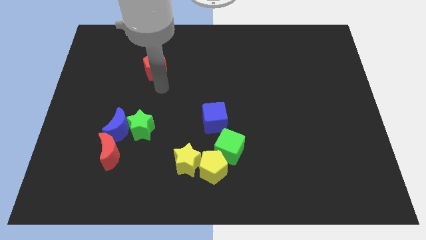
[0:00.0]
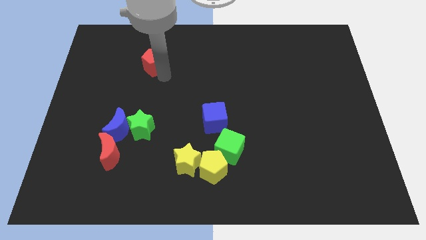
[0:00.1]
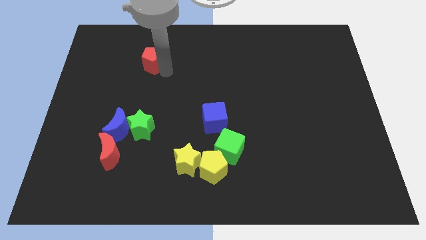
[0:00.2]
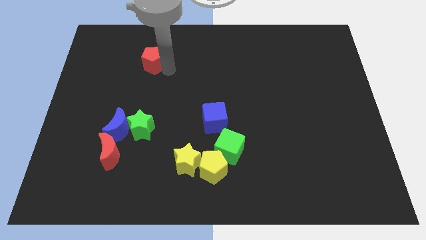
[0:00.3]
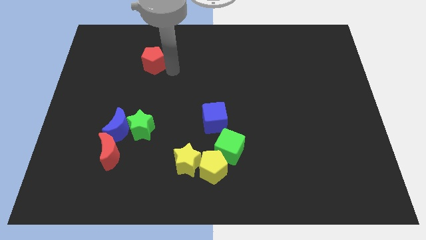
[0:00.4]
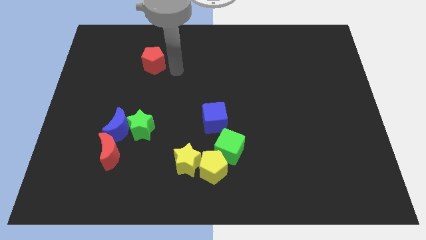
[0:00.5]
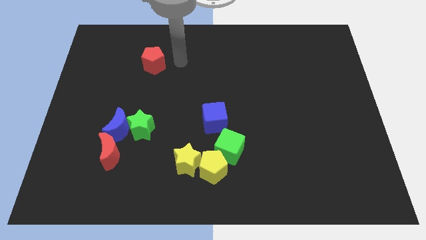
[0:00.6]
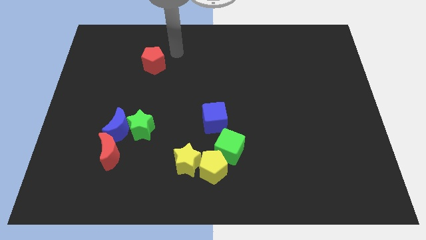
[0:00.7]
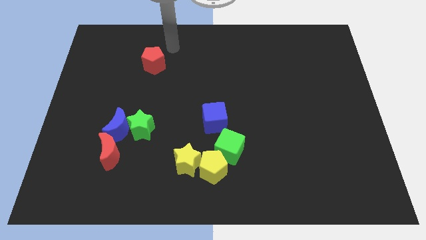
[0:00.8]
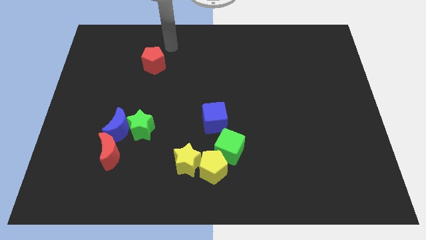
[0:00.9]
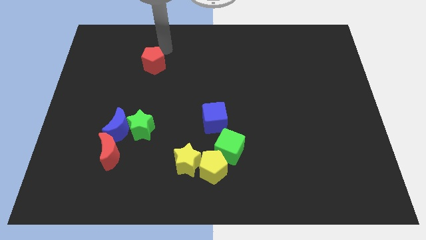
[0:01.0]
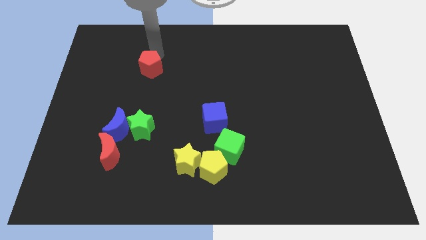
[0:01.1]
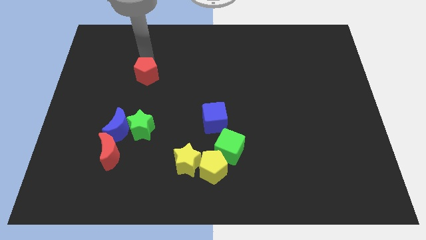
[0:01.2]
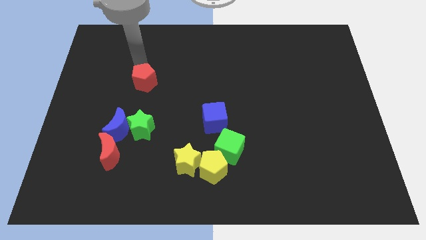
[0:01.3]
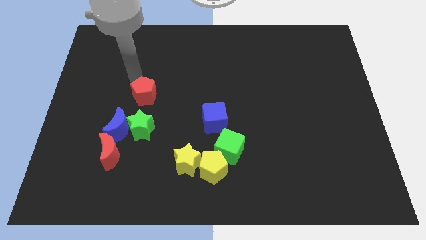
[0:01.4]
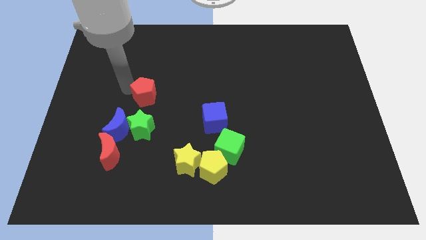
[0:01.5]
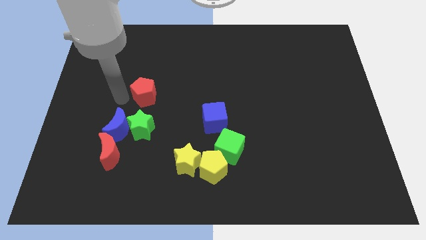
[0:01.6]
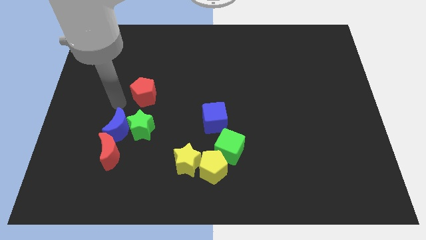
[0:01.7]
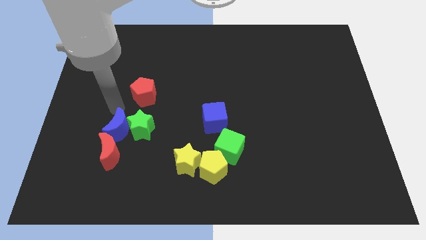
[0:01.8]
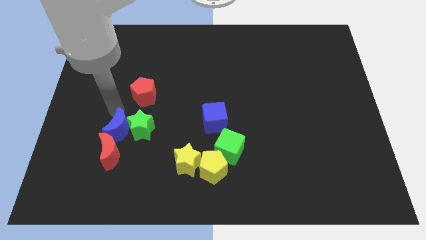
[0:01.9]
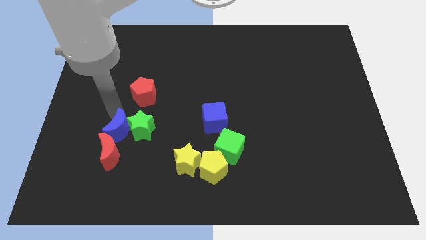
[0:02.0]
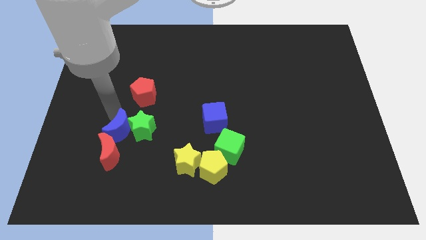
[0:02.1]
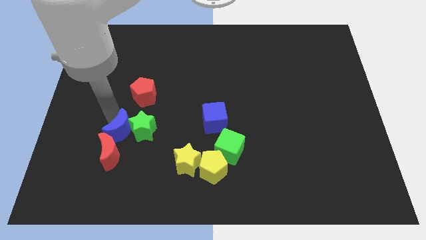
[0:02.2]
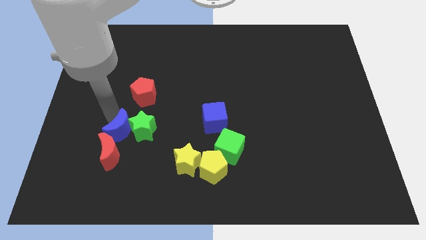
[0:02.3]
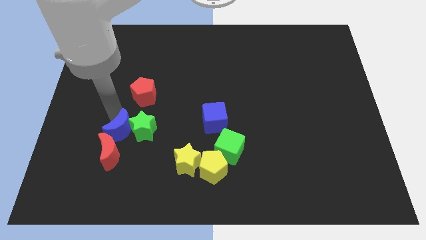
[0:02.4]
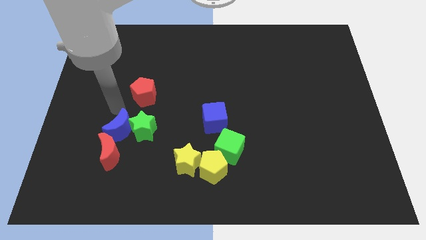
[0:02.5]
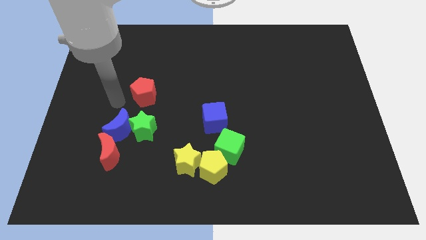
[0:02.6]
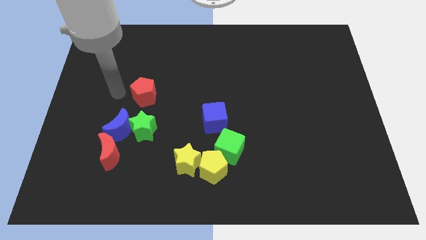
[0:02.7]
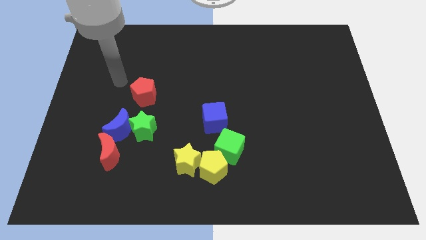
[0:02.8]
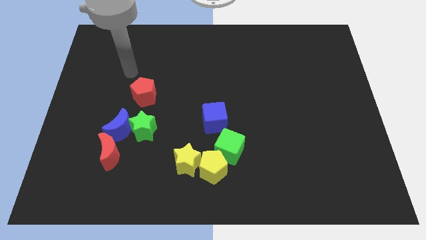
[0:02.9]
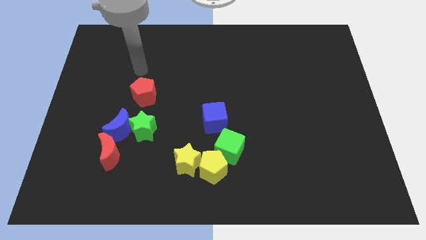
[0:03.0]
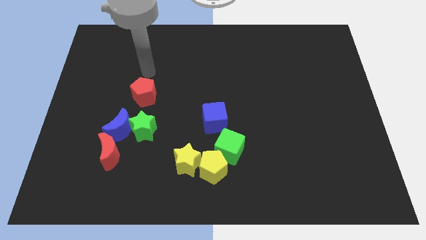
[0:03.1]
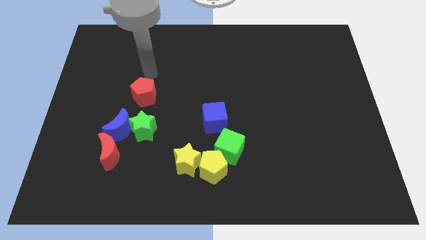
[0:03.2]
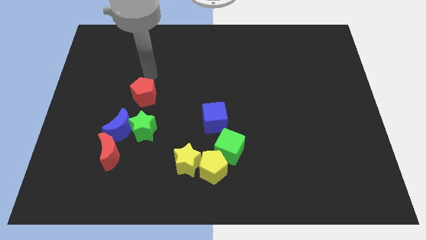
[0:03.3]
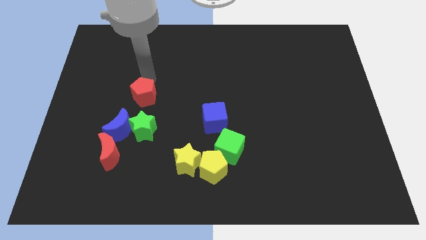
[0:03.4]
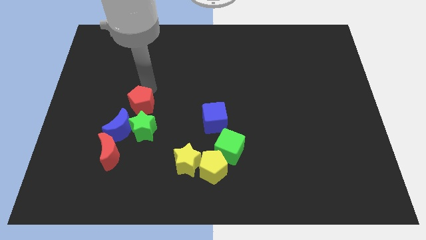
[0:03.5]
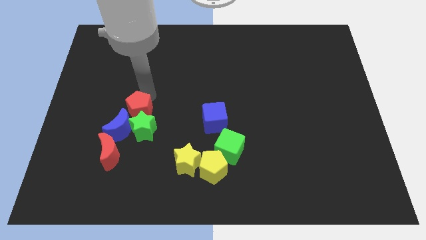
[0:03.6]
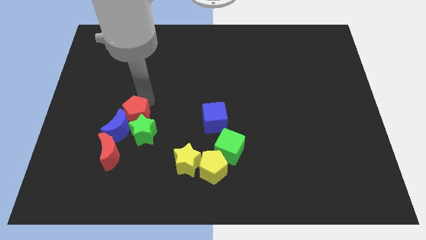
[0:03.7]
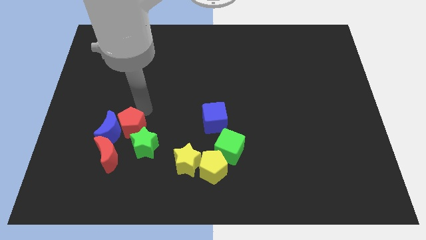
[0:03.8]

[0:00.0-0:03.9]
move the red pentagon to the right of the blue crescent

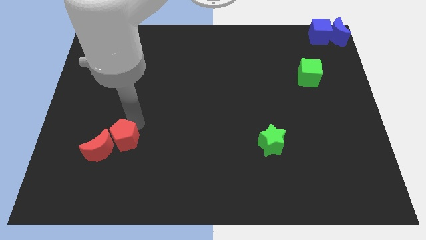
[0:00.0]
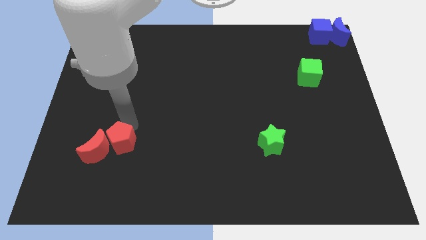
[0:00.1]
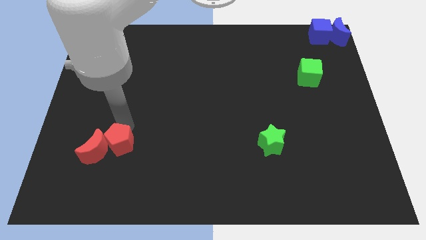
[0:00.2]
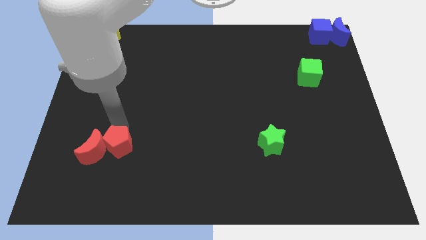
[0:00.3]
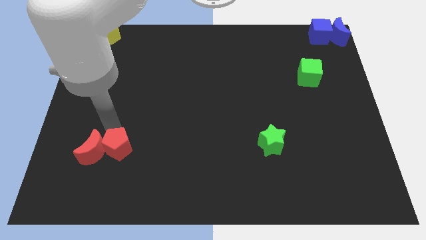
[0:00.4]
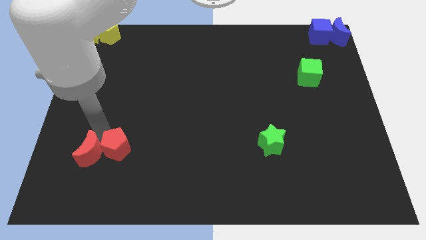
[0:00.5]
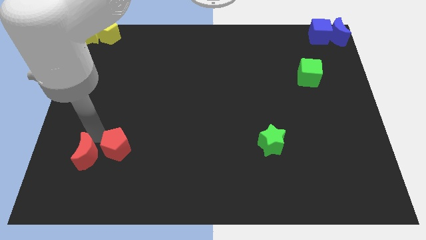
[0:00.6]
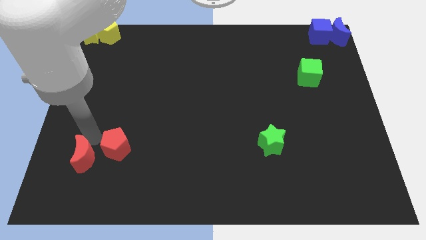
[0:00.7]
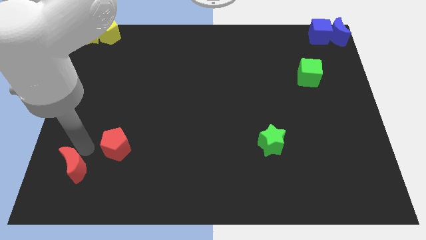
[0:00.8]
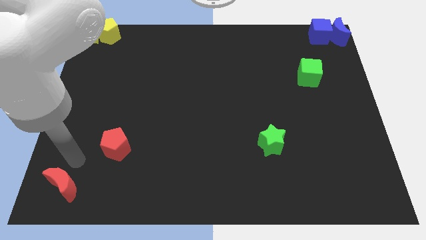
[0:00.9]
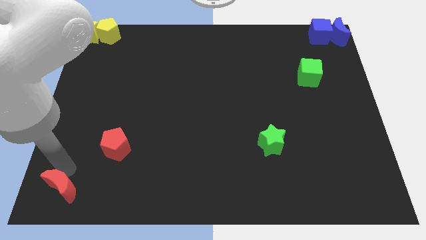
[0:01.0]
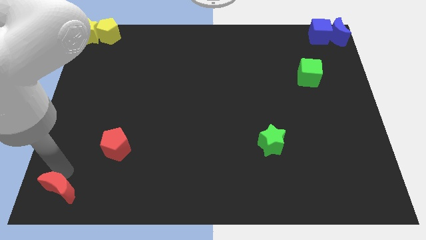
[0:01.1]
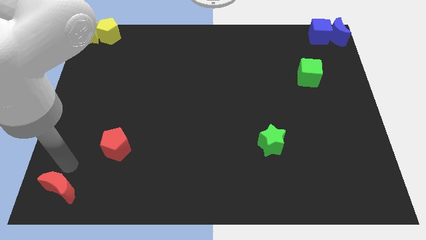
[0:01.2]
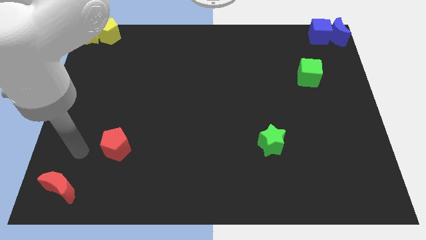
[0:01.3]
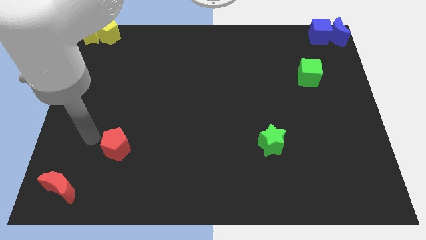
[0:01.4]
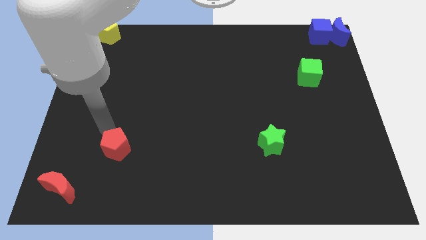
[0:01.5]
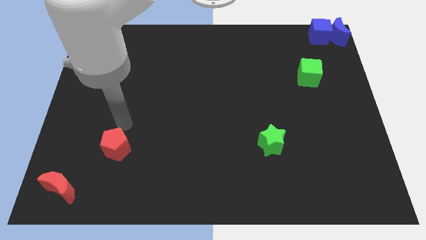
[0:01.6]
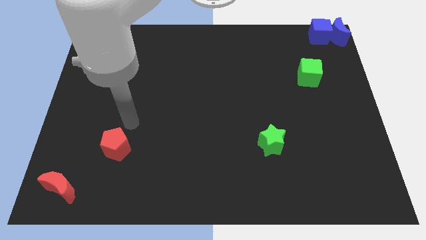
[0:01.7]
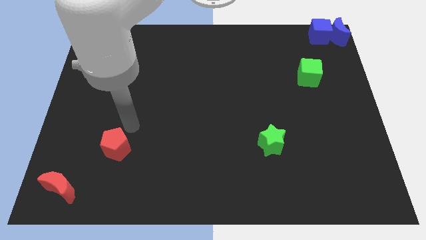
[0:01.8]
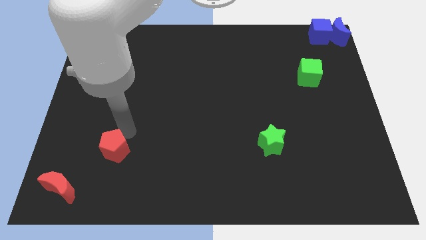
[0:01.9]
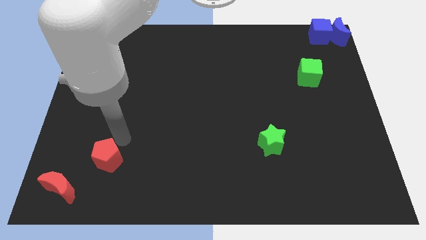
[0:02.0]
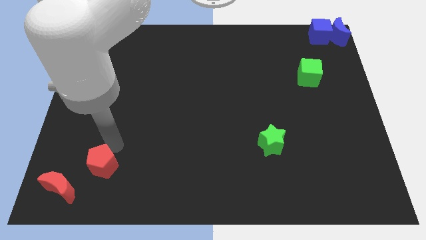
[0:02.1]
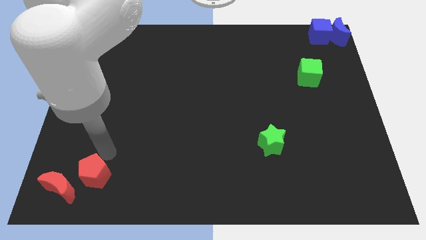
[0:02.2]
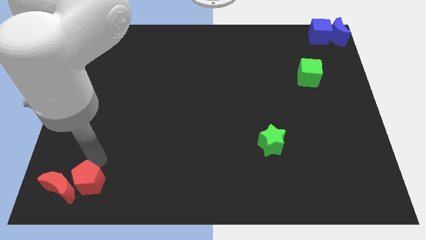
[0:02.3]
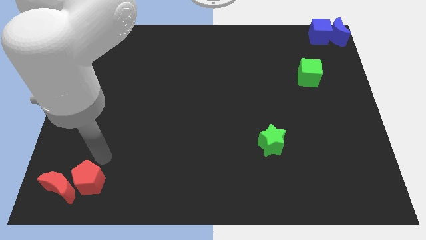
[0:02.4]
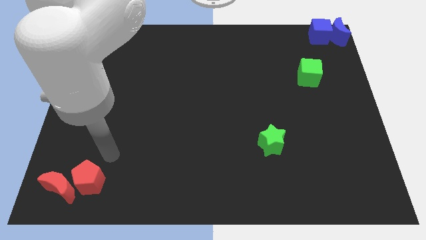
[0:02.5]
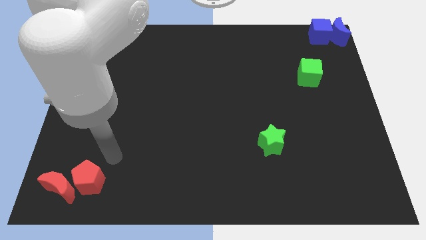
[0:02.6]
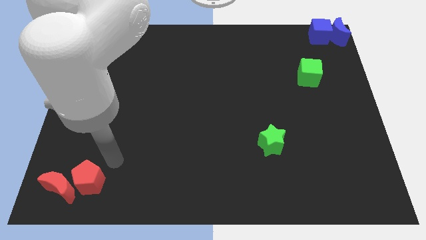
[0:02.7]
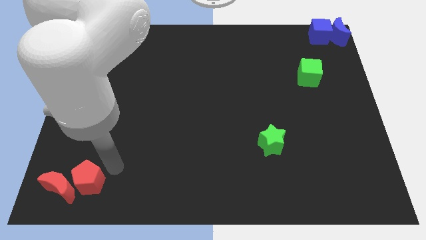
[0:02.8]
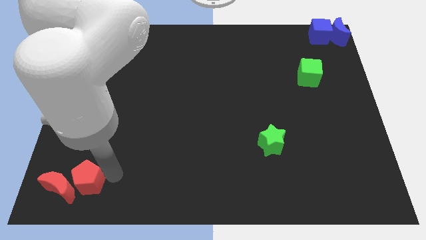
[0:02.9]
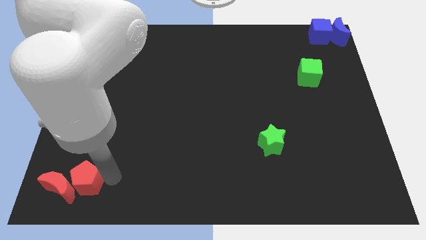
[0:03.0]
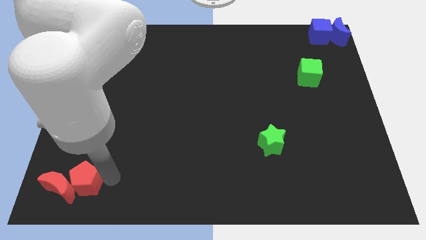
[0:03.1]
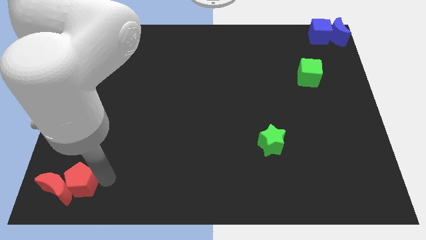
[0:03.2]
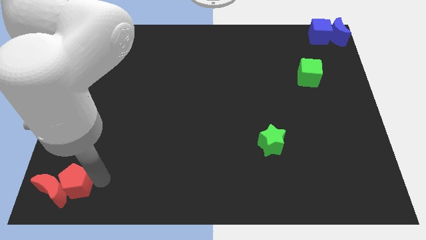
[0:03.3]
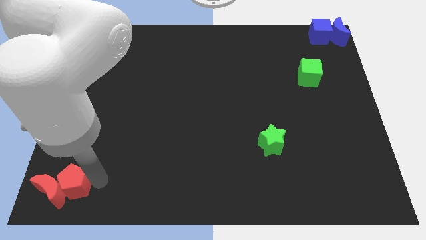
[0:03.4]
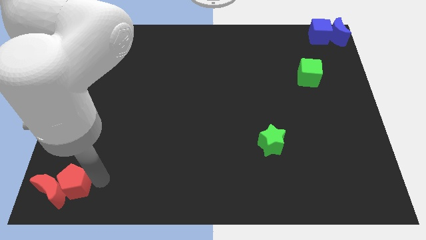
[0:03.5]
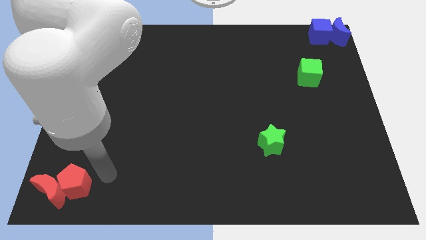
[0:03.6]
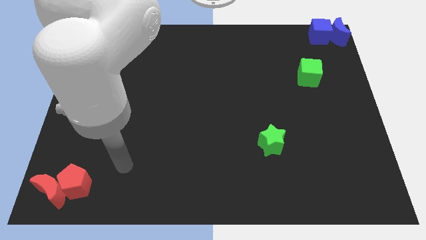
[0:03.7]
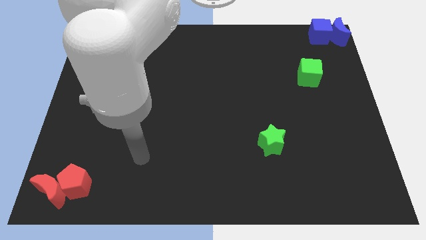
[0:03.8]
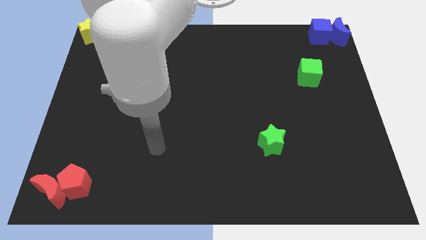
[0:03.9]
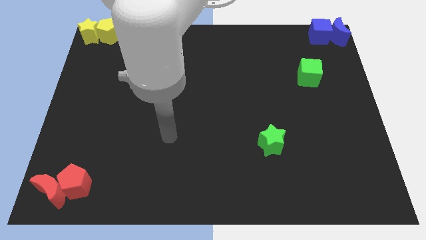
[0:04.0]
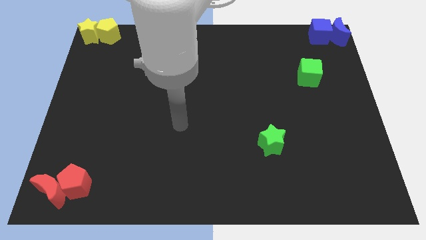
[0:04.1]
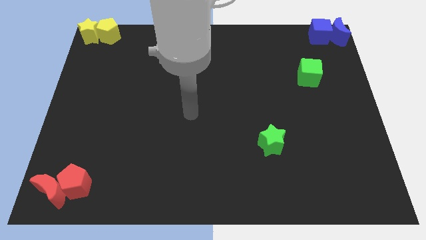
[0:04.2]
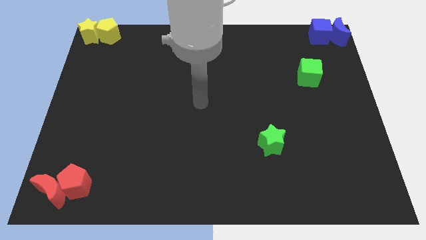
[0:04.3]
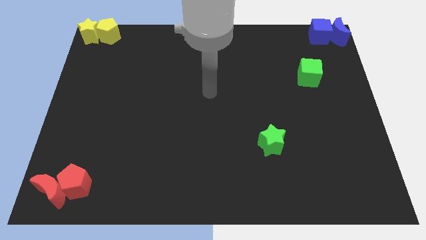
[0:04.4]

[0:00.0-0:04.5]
move the red blocks to the bottom left to the board

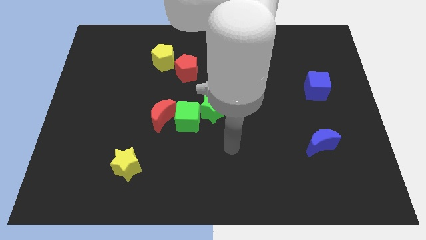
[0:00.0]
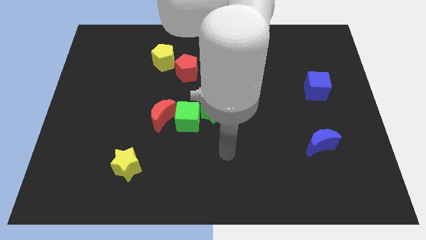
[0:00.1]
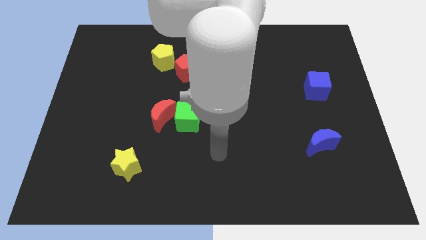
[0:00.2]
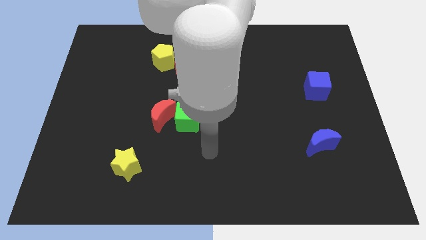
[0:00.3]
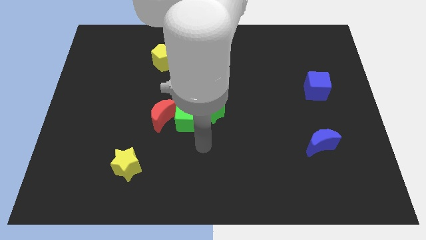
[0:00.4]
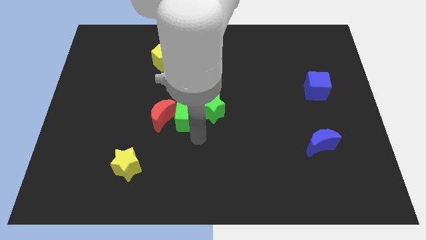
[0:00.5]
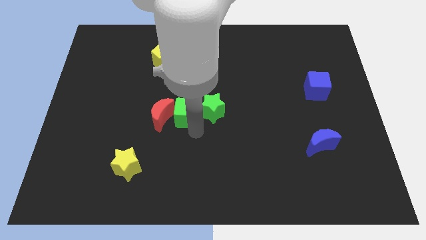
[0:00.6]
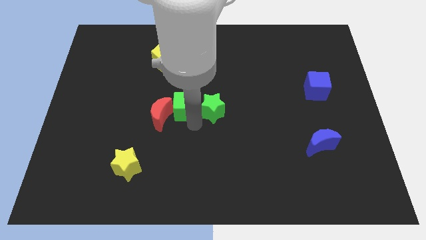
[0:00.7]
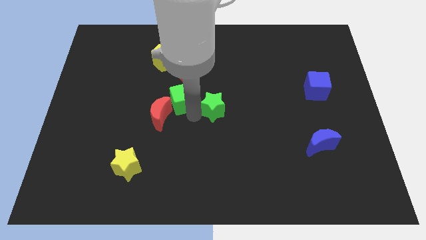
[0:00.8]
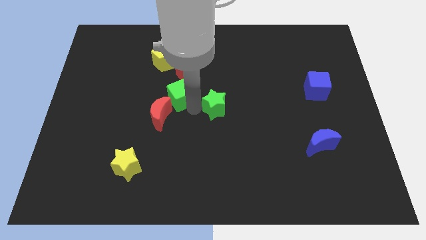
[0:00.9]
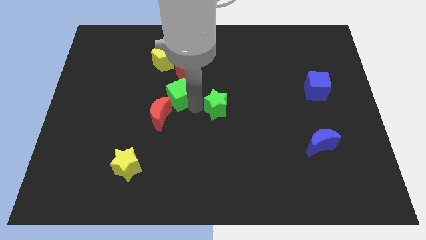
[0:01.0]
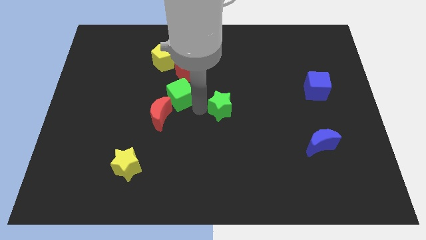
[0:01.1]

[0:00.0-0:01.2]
push green cube upwards
